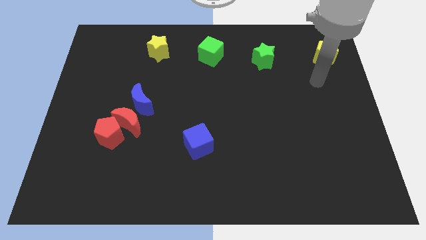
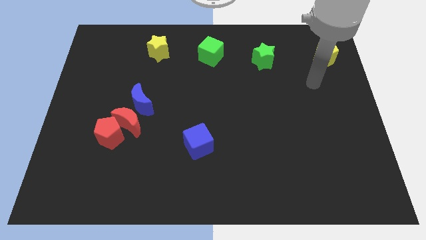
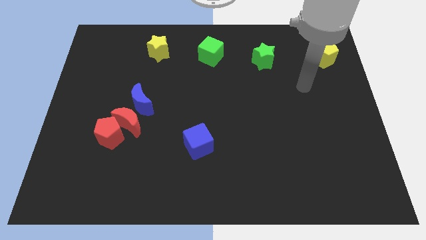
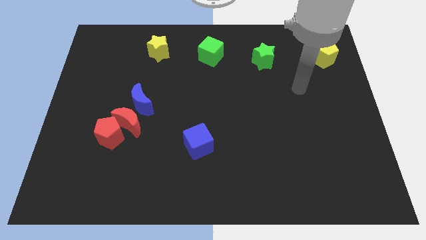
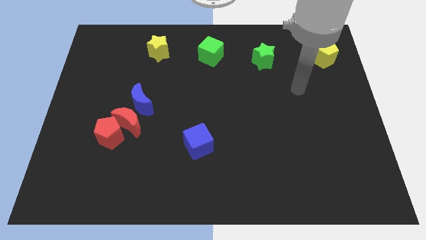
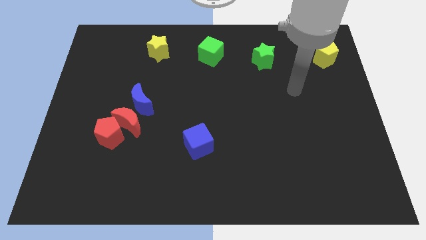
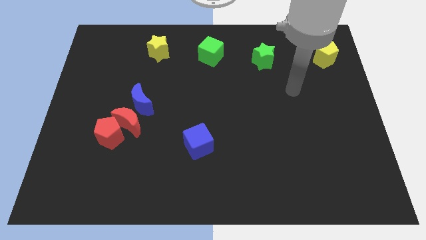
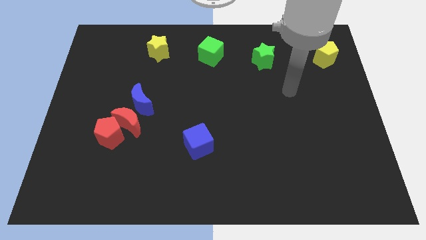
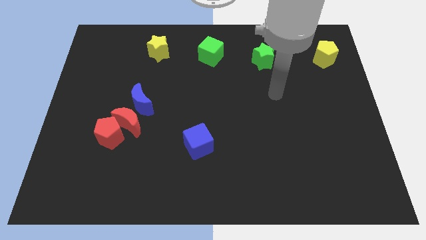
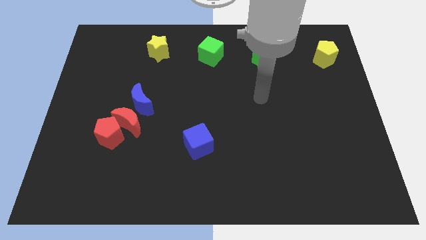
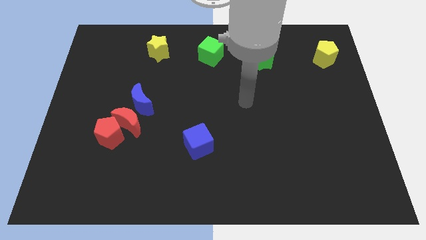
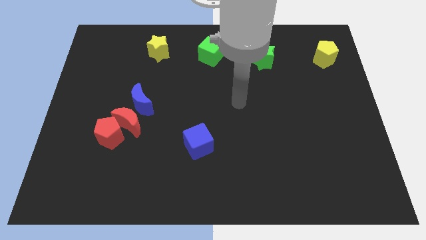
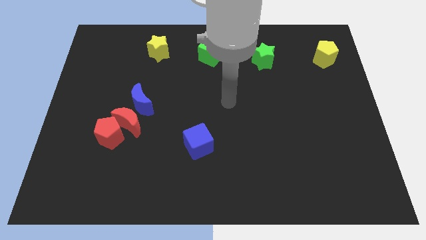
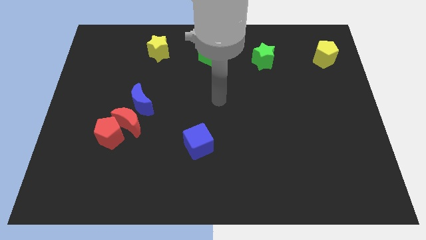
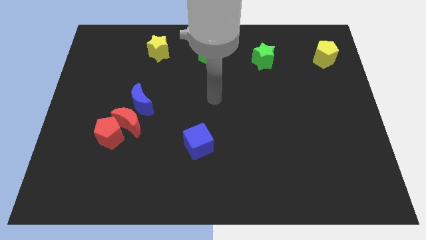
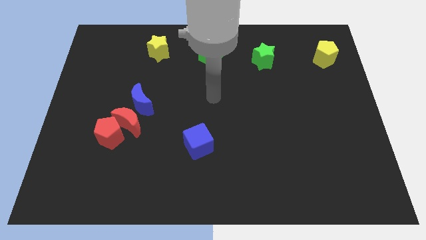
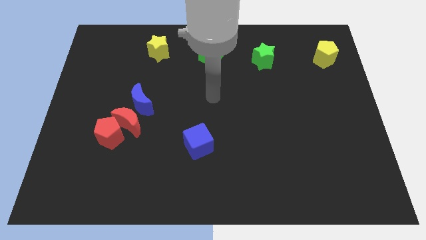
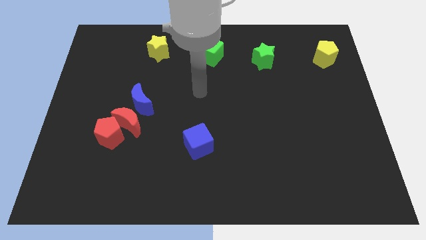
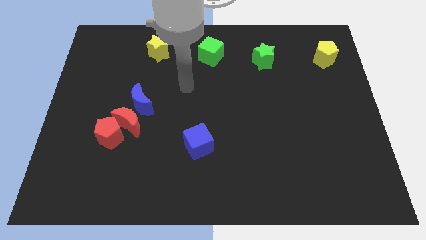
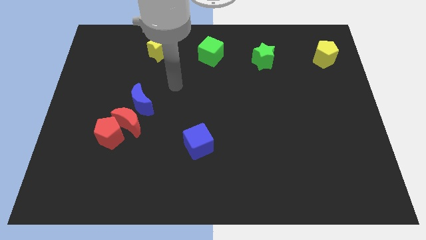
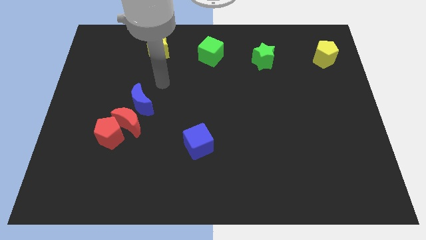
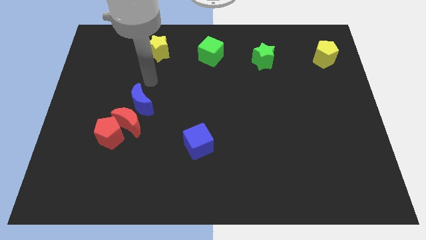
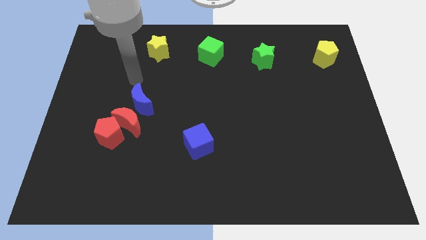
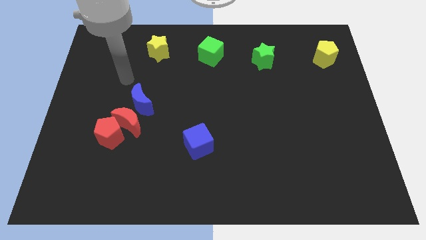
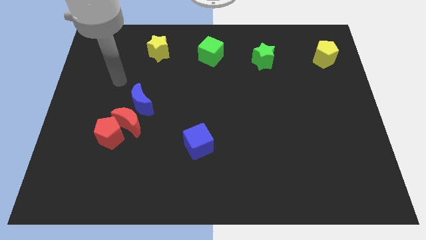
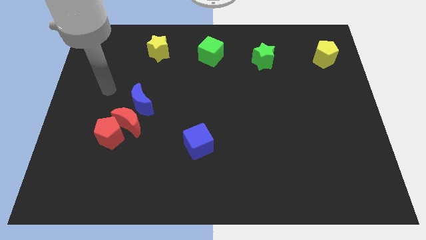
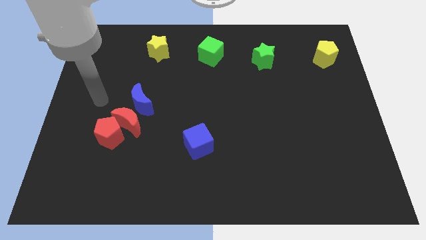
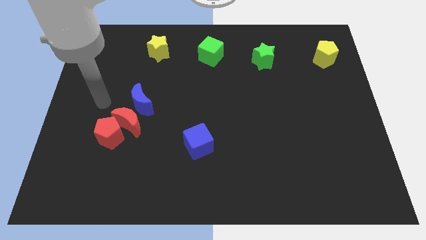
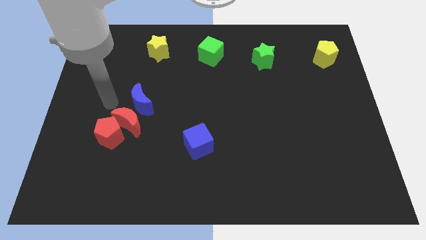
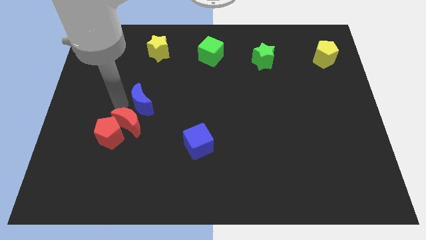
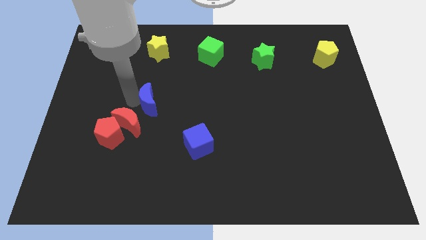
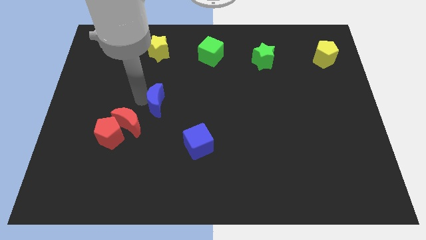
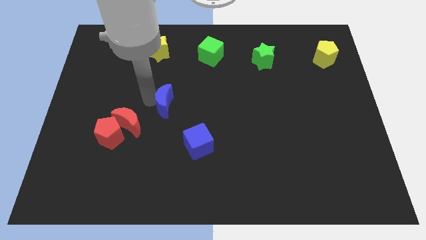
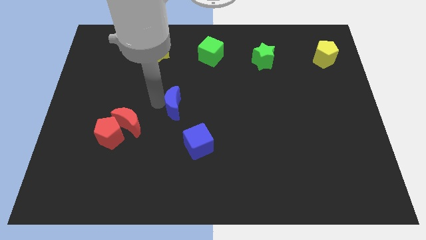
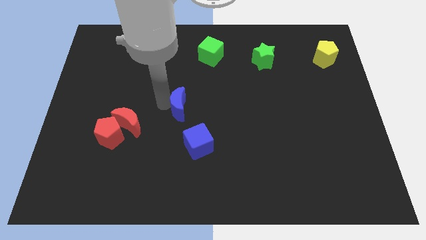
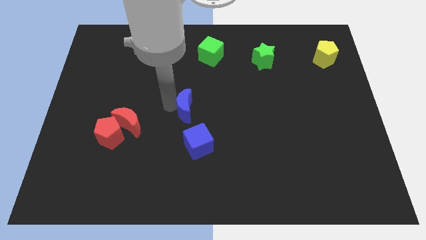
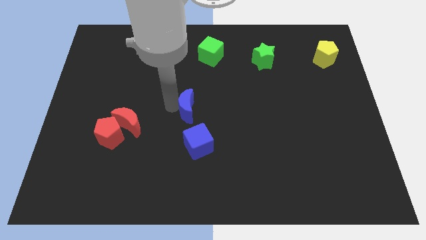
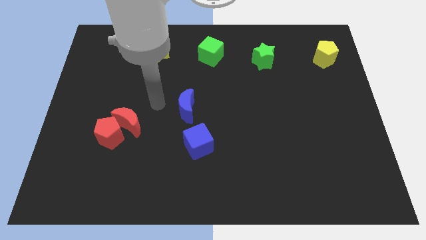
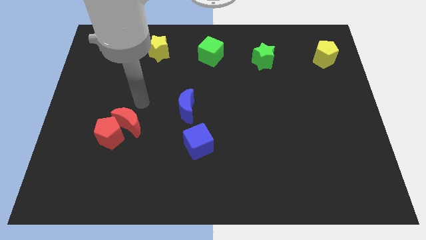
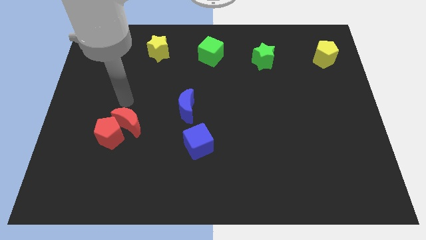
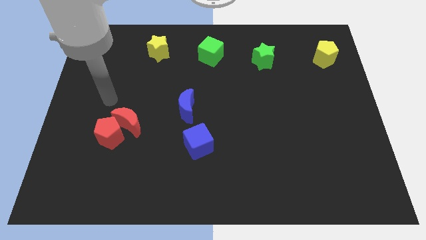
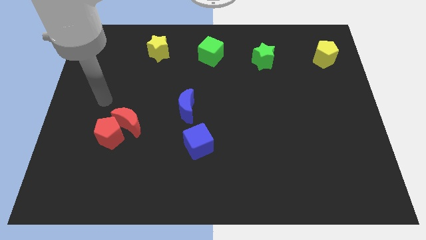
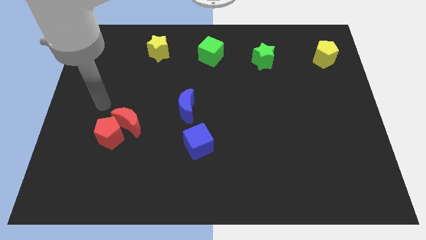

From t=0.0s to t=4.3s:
place blue moon to the top of blue cube

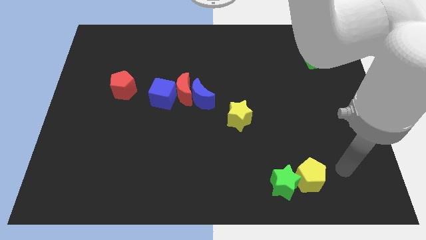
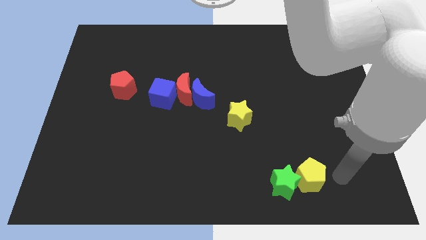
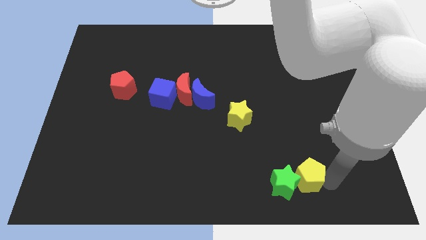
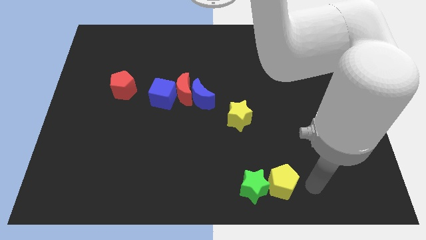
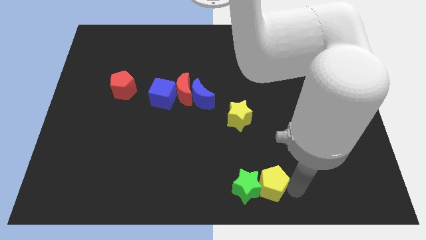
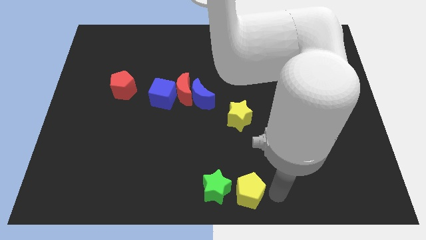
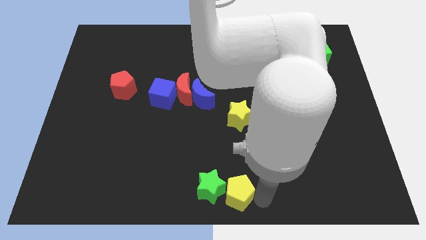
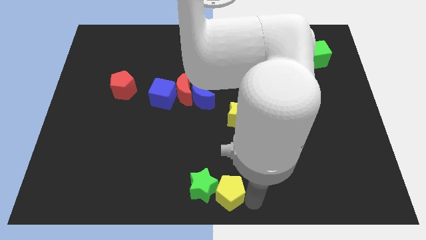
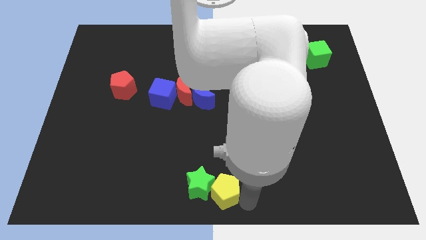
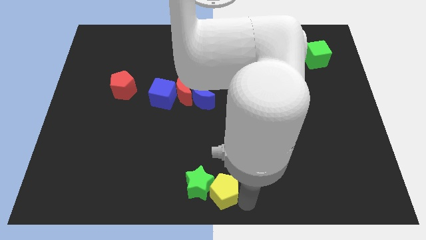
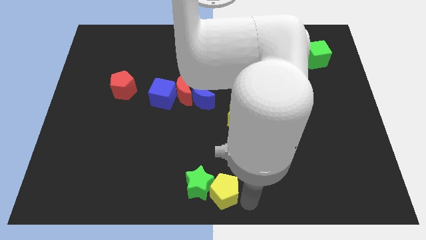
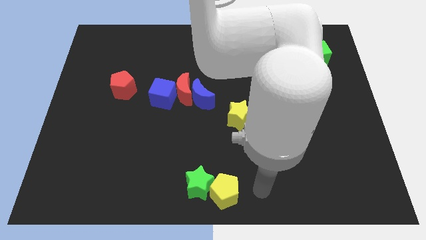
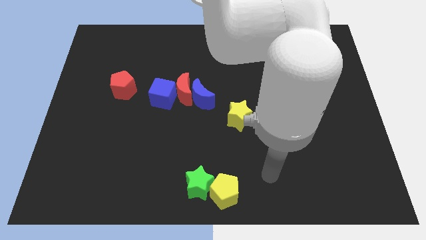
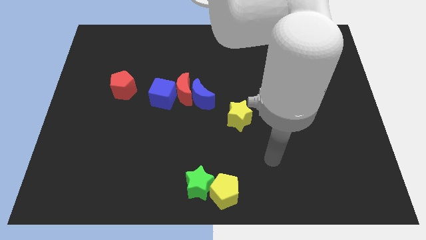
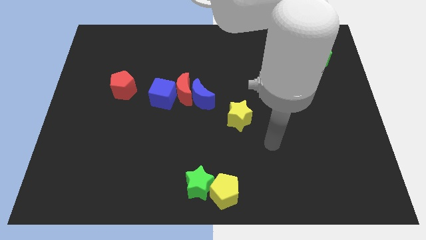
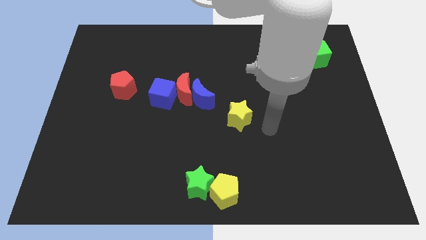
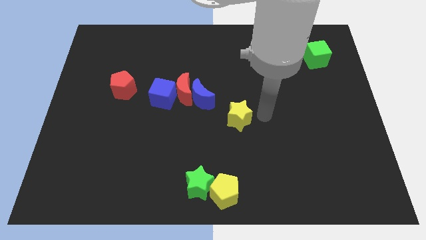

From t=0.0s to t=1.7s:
push green star to the left side of the board with yellow pentagon

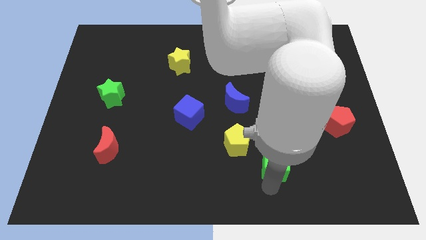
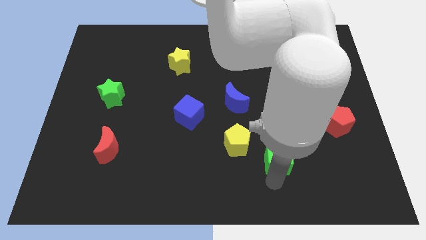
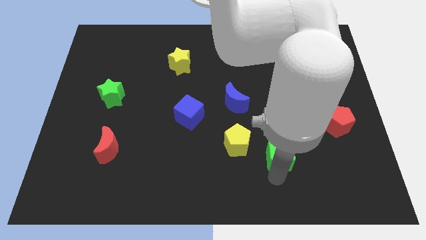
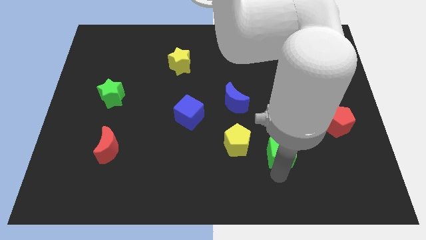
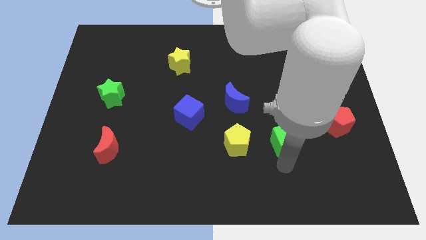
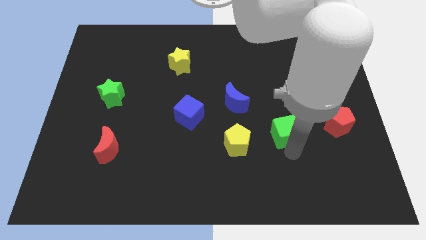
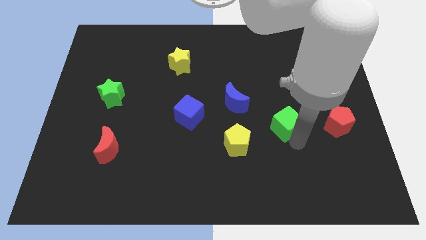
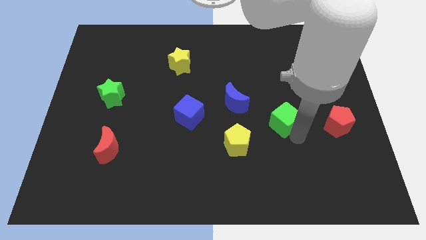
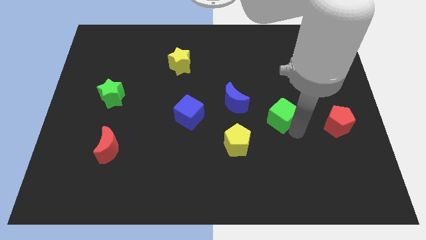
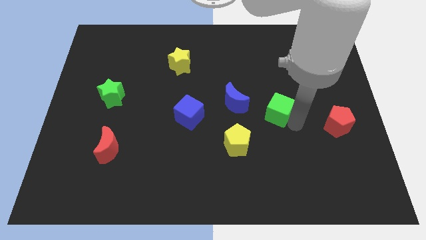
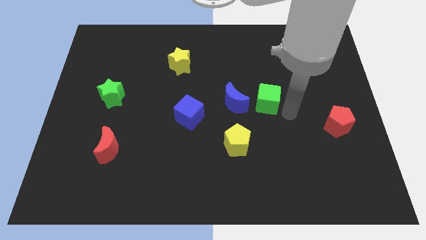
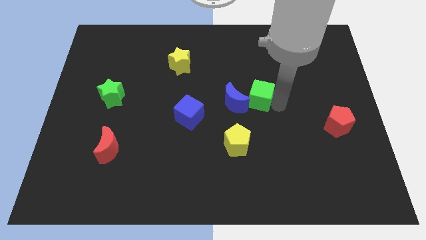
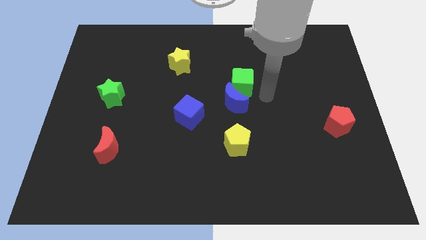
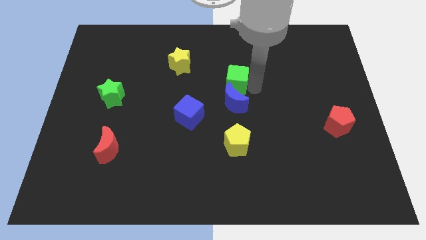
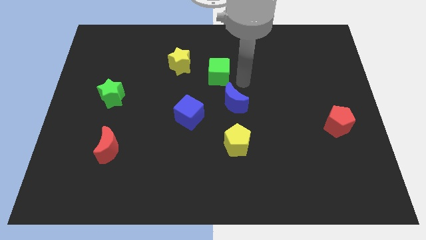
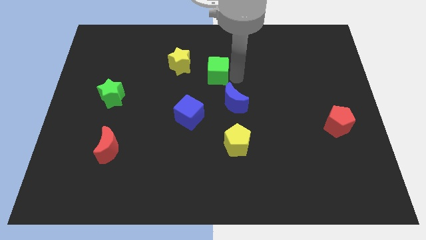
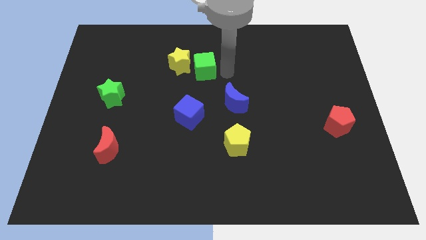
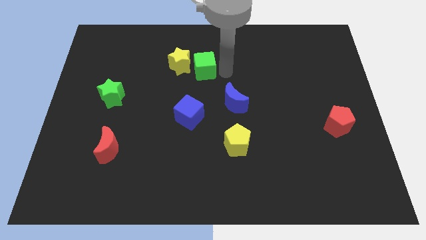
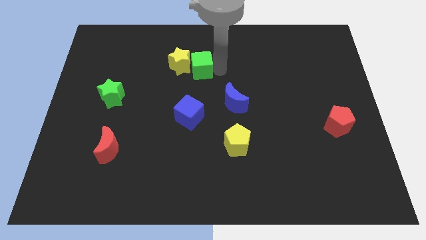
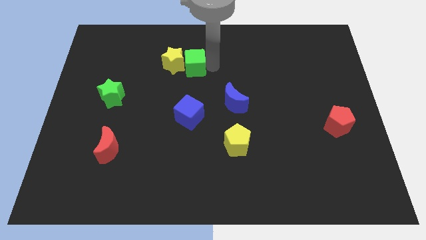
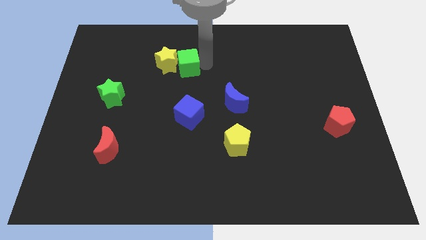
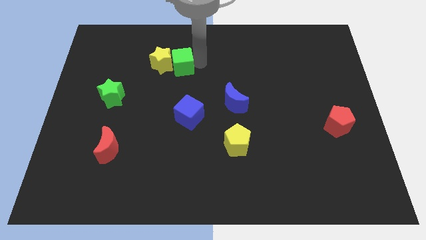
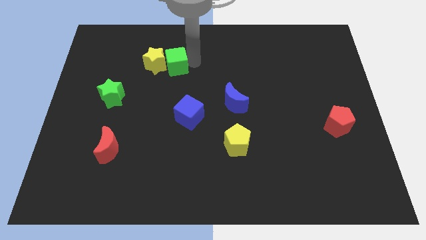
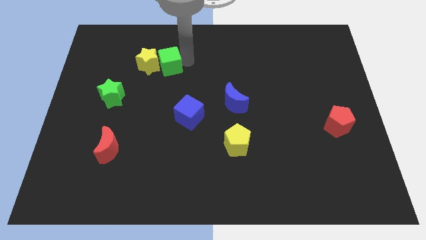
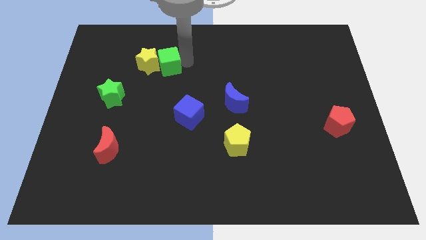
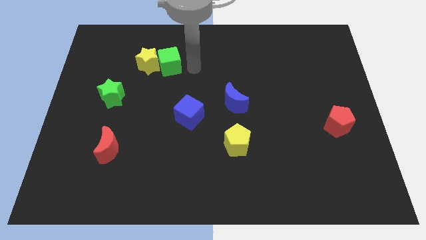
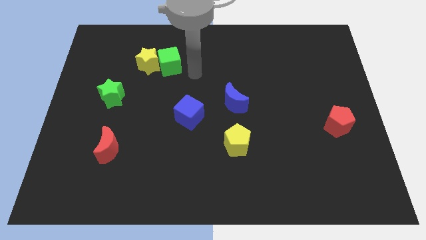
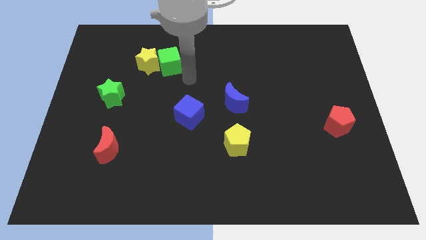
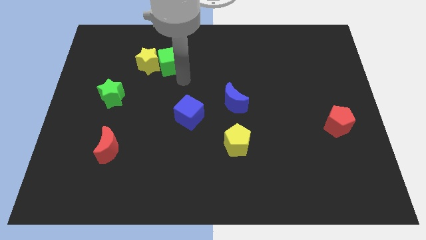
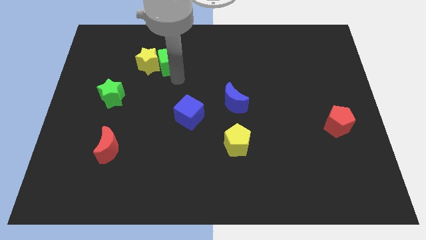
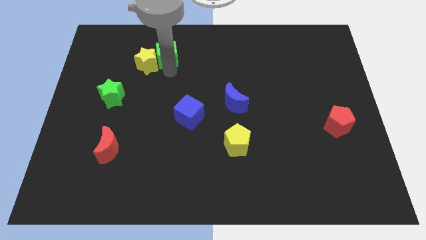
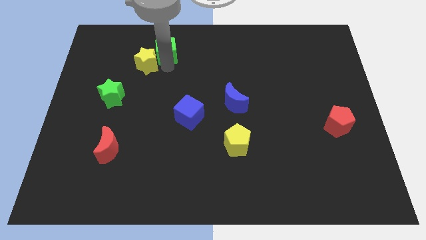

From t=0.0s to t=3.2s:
slide the green cube into the yellow star
